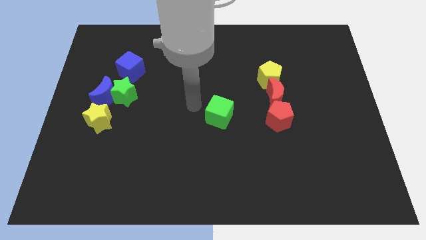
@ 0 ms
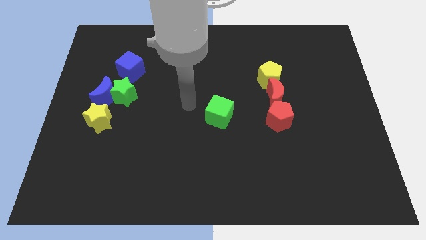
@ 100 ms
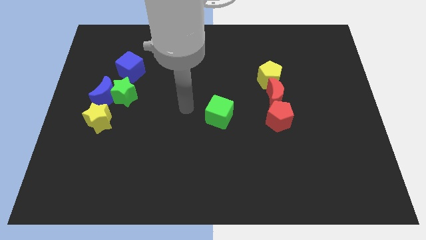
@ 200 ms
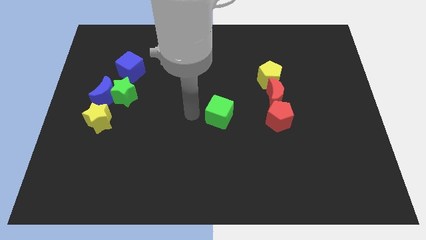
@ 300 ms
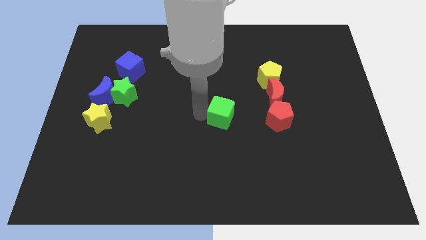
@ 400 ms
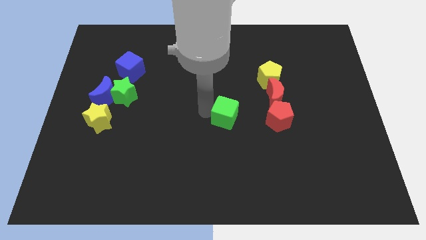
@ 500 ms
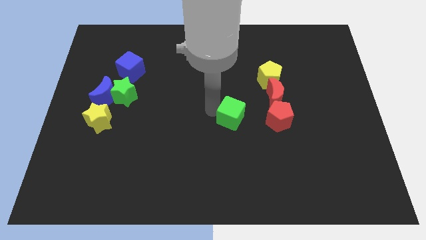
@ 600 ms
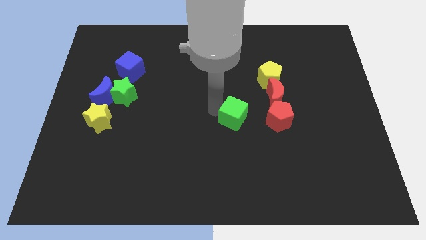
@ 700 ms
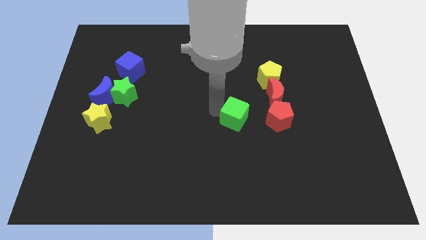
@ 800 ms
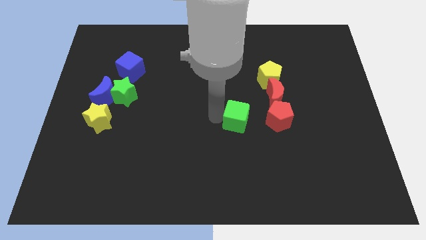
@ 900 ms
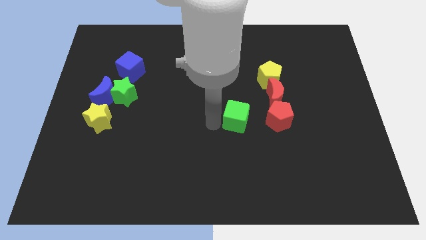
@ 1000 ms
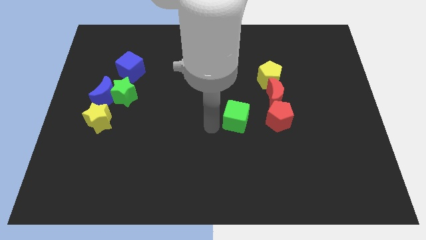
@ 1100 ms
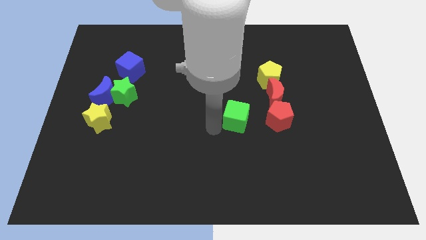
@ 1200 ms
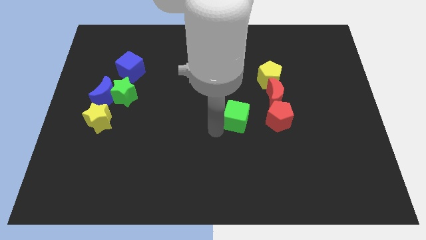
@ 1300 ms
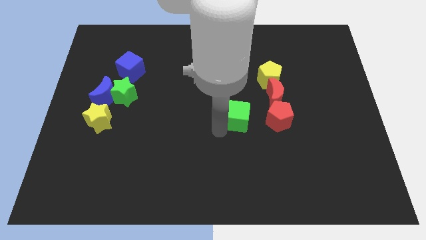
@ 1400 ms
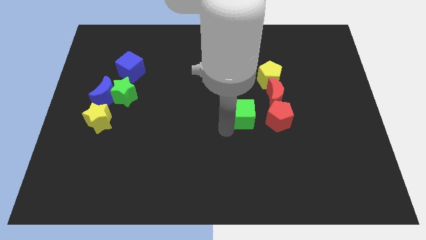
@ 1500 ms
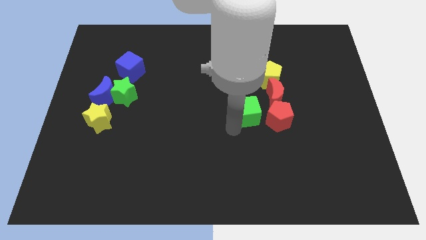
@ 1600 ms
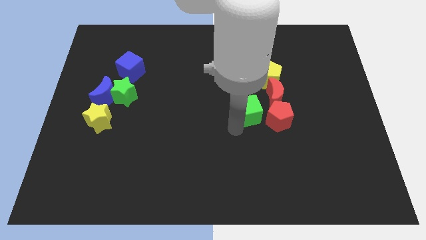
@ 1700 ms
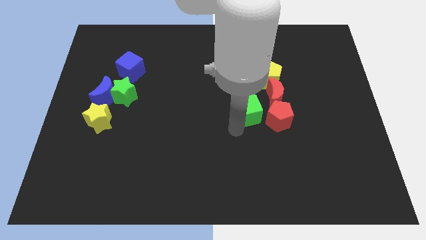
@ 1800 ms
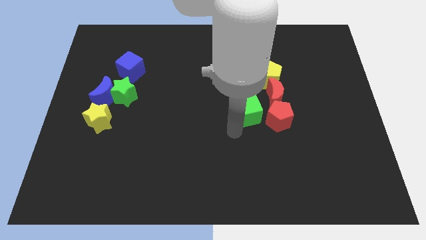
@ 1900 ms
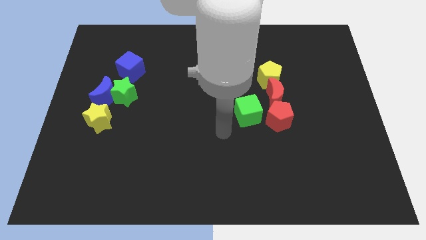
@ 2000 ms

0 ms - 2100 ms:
move green cube close to red pentagon

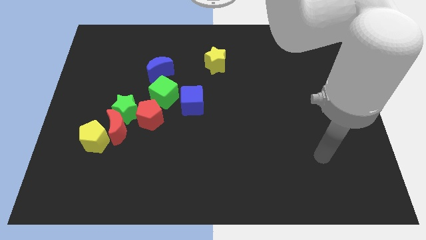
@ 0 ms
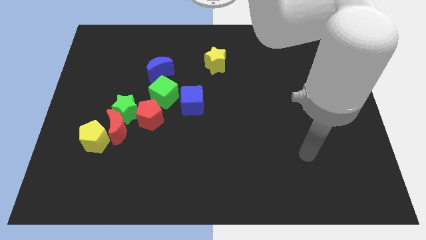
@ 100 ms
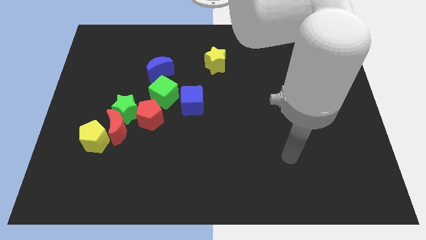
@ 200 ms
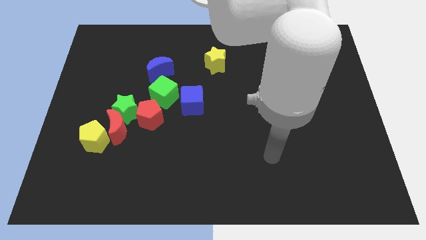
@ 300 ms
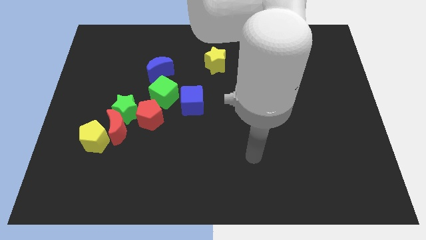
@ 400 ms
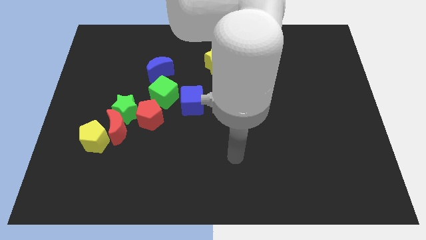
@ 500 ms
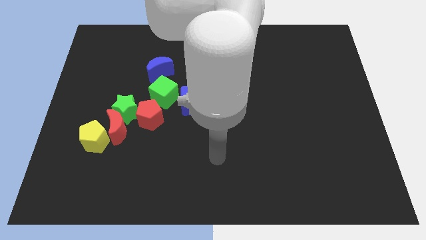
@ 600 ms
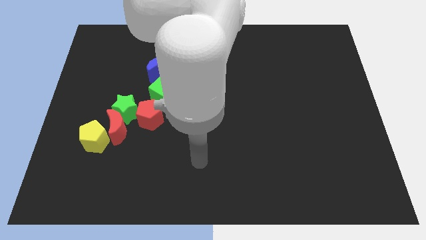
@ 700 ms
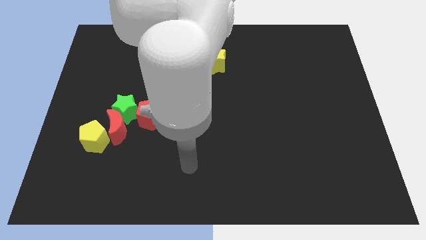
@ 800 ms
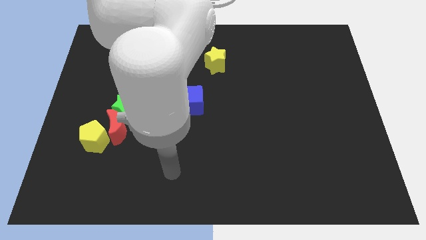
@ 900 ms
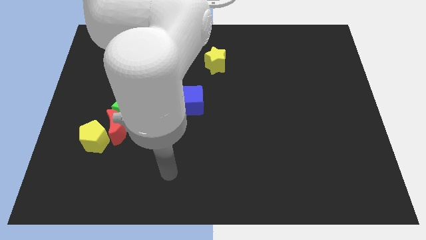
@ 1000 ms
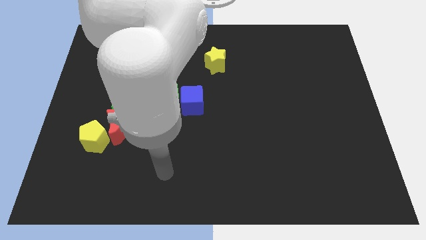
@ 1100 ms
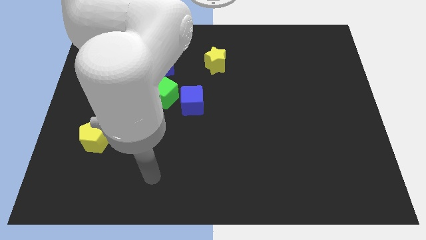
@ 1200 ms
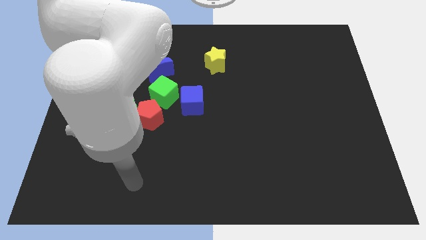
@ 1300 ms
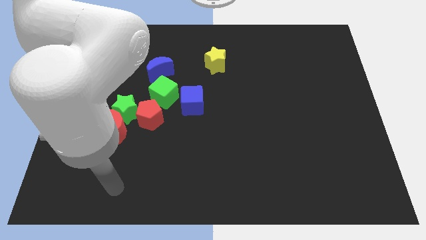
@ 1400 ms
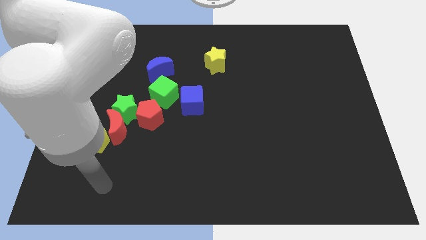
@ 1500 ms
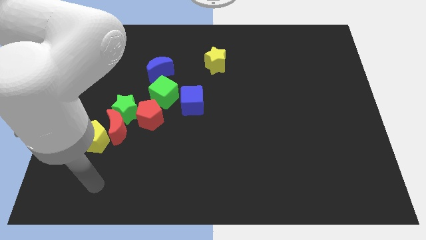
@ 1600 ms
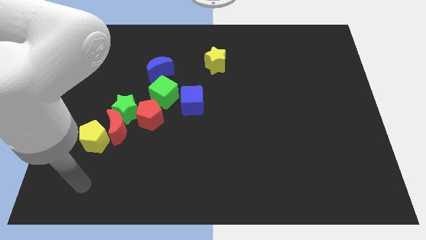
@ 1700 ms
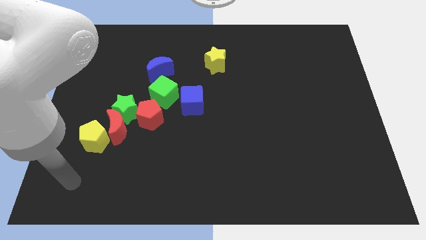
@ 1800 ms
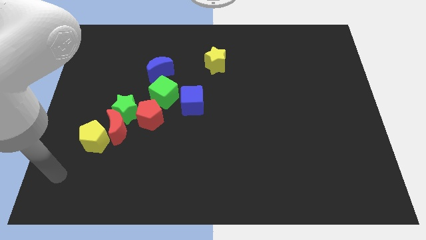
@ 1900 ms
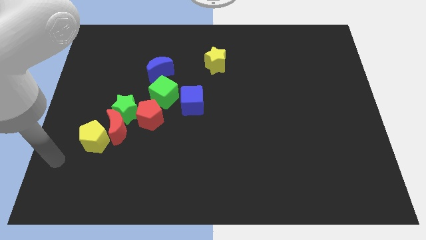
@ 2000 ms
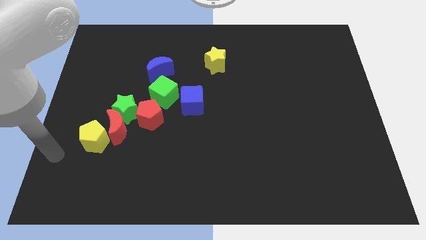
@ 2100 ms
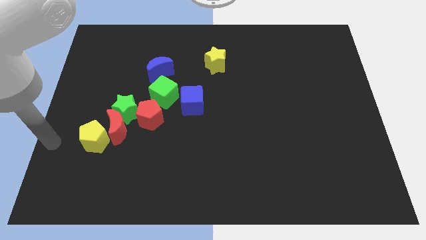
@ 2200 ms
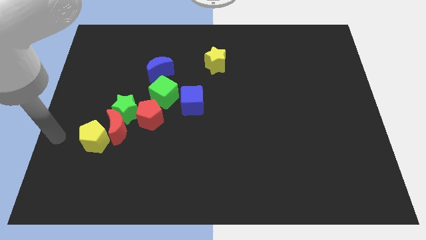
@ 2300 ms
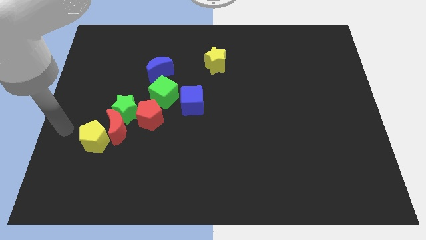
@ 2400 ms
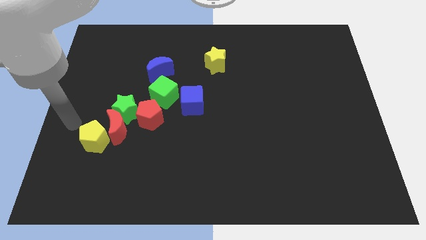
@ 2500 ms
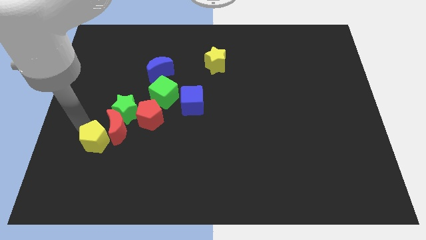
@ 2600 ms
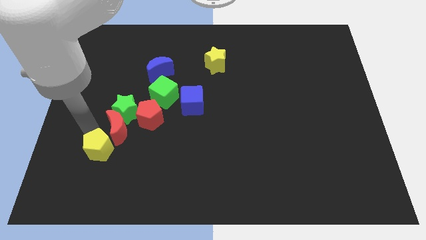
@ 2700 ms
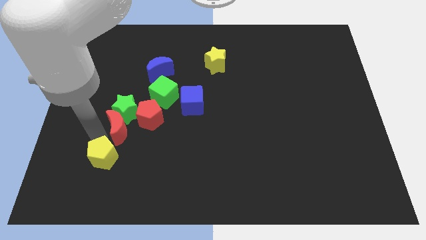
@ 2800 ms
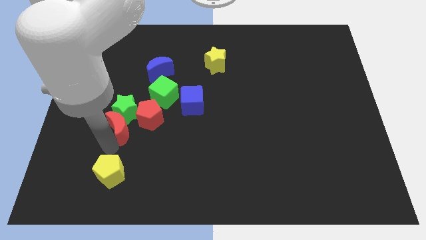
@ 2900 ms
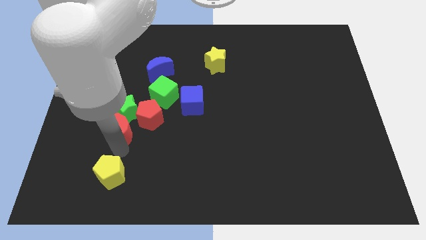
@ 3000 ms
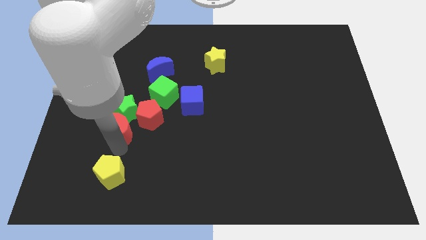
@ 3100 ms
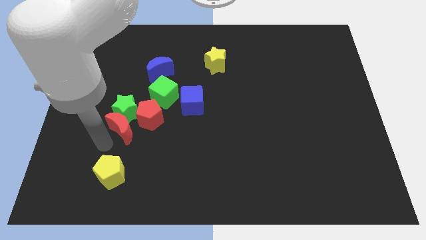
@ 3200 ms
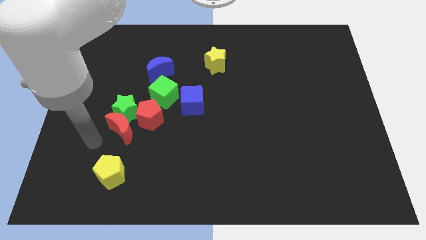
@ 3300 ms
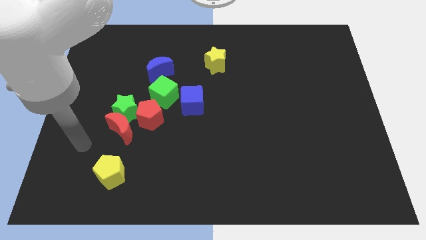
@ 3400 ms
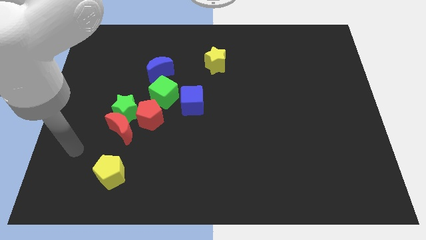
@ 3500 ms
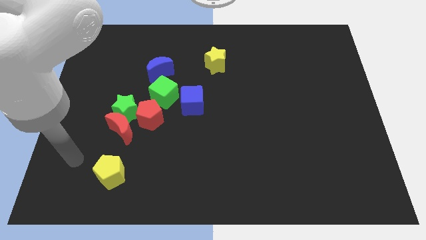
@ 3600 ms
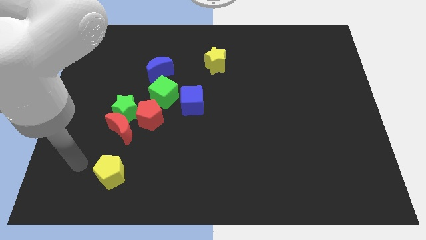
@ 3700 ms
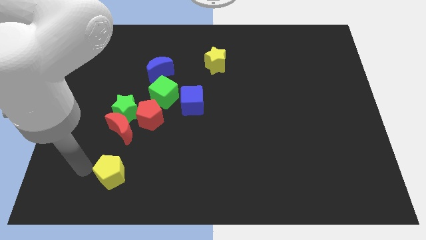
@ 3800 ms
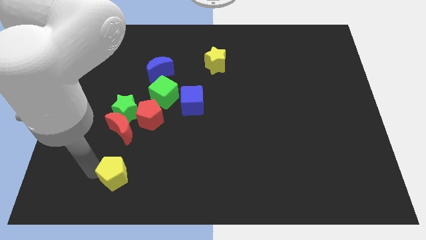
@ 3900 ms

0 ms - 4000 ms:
push yellow pentagon towards bottom of the board

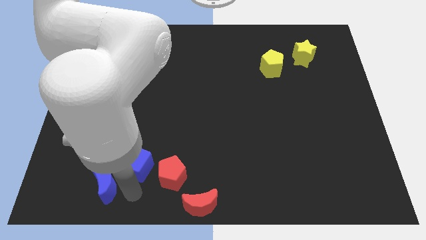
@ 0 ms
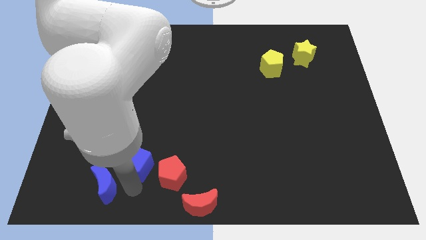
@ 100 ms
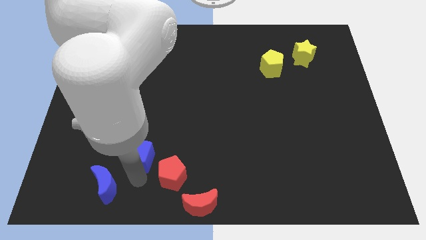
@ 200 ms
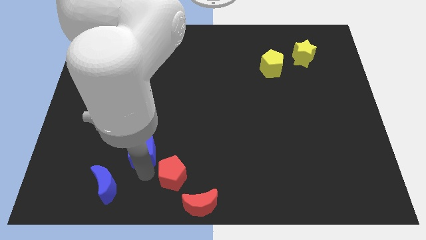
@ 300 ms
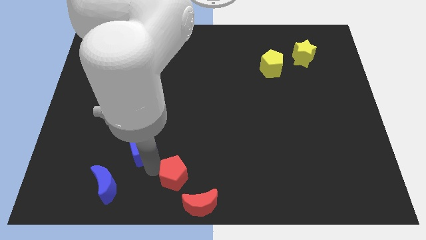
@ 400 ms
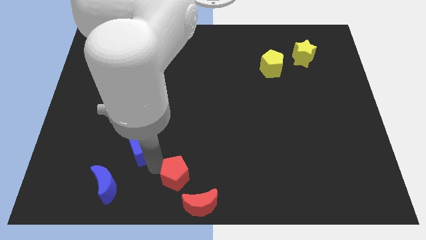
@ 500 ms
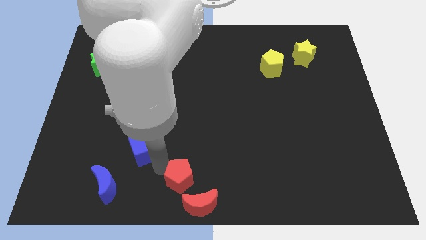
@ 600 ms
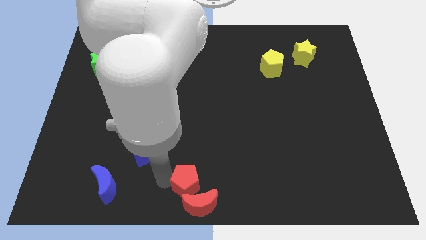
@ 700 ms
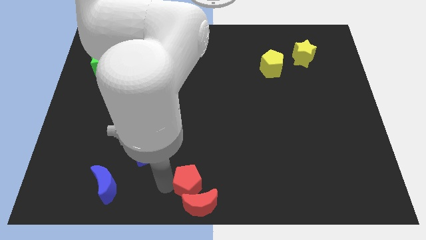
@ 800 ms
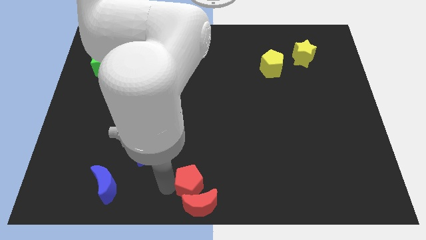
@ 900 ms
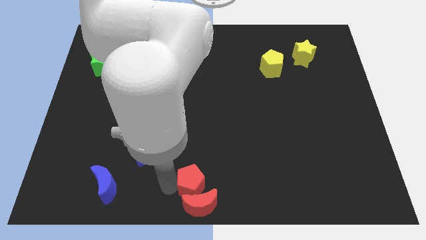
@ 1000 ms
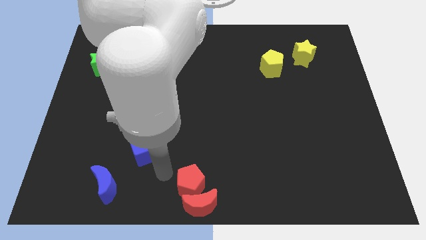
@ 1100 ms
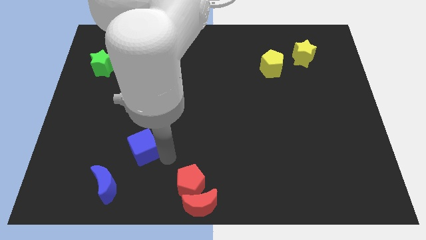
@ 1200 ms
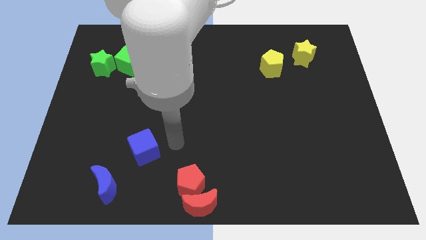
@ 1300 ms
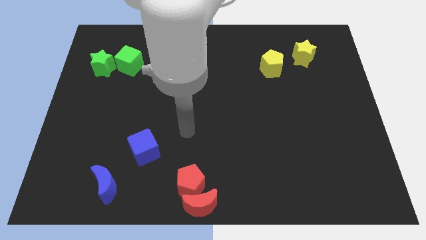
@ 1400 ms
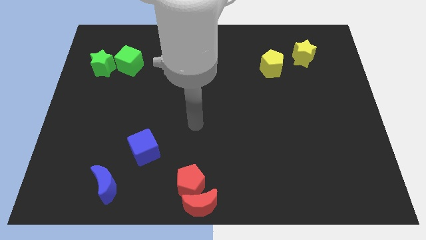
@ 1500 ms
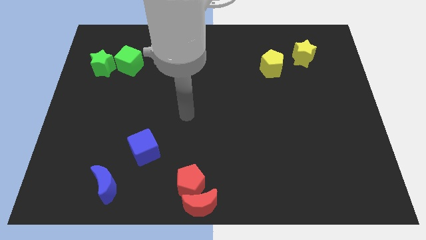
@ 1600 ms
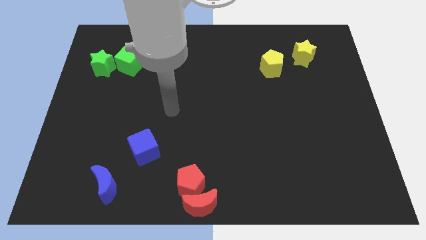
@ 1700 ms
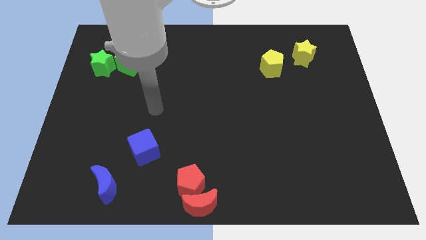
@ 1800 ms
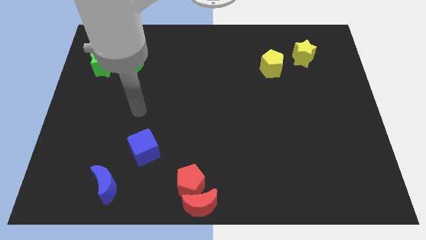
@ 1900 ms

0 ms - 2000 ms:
slightly push both red pentagon and crescent to their right

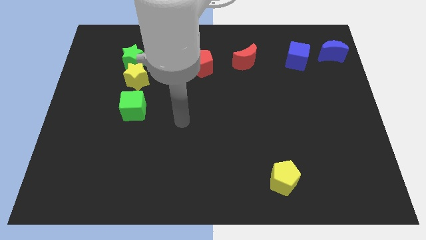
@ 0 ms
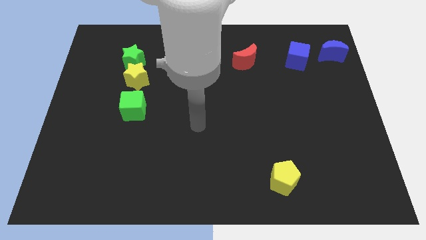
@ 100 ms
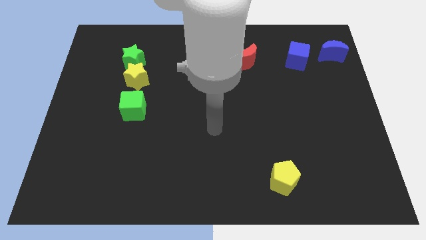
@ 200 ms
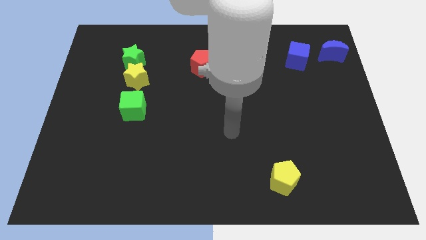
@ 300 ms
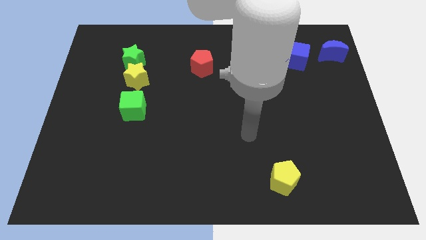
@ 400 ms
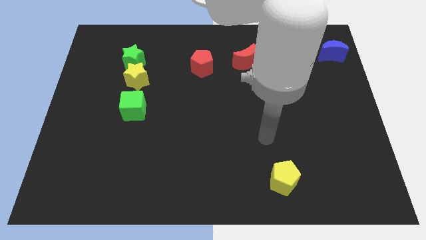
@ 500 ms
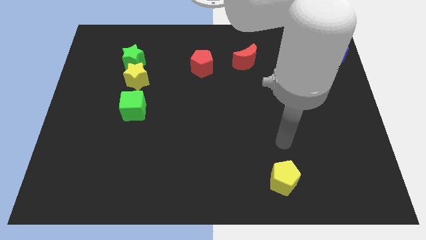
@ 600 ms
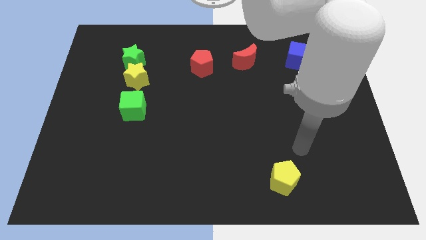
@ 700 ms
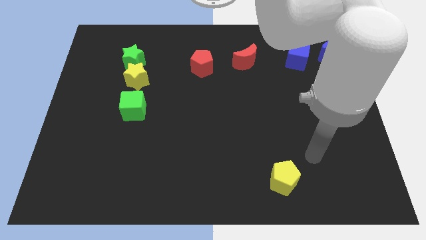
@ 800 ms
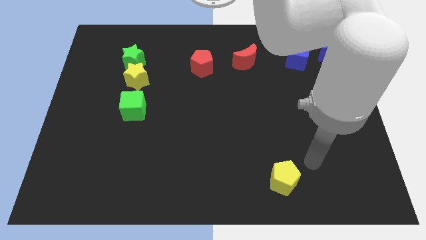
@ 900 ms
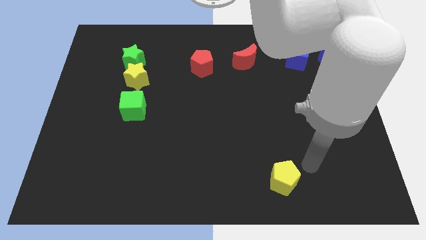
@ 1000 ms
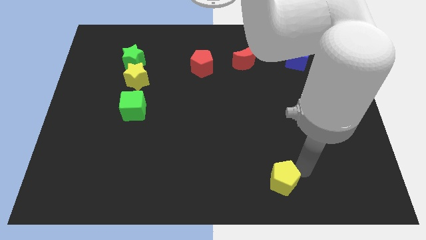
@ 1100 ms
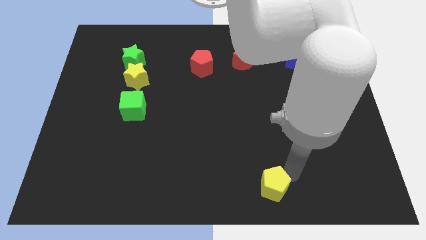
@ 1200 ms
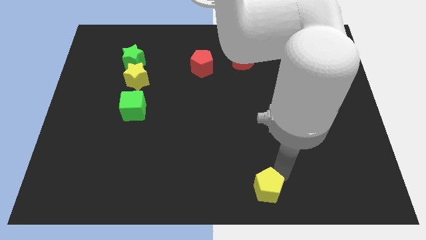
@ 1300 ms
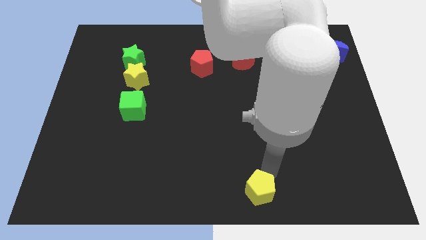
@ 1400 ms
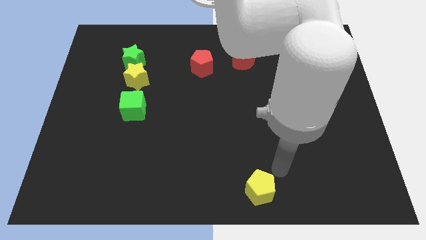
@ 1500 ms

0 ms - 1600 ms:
move the yellow pentagon to the bottom side of the board
